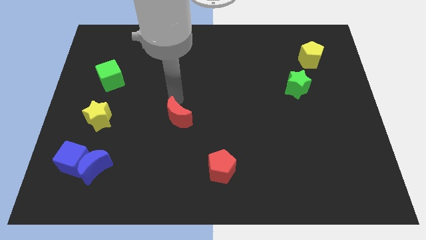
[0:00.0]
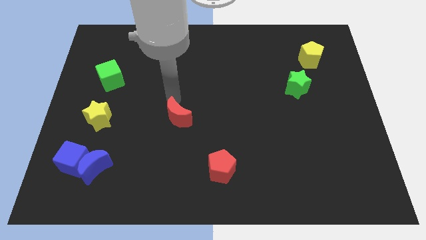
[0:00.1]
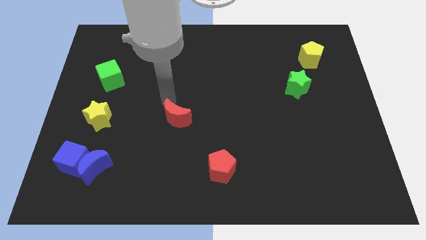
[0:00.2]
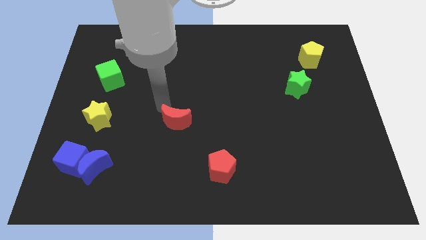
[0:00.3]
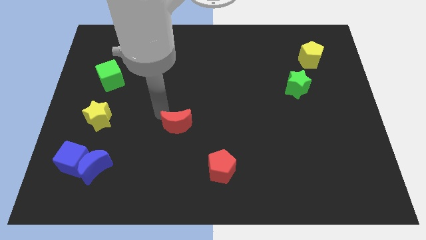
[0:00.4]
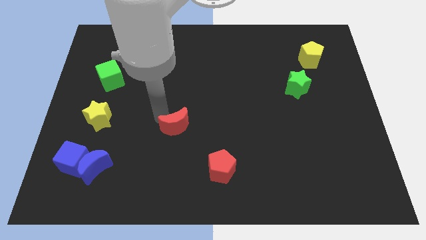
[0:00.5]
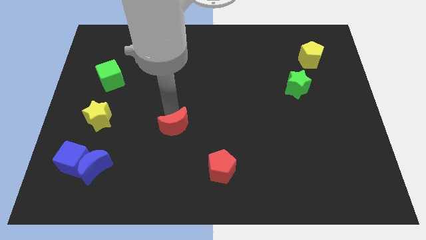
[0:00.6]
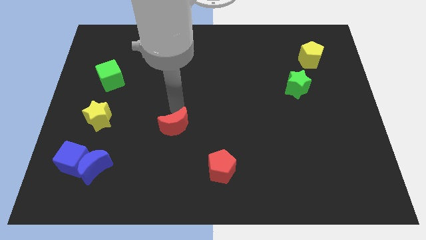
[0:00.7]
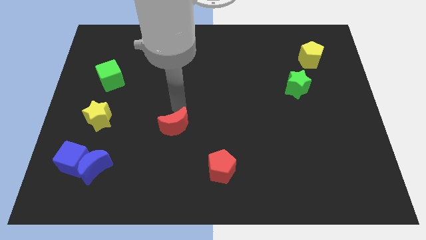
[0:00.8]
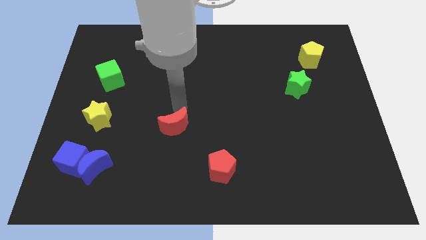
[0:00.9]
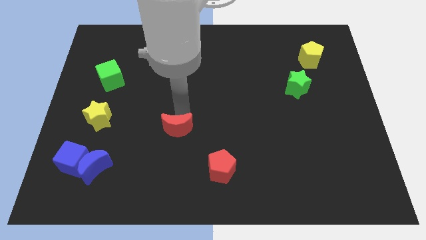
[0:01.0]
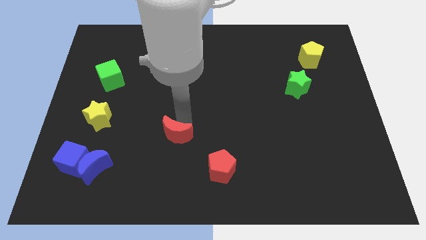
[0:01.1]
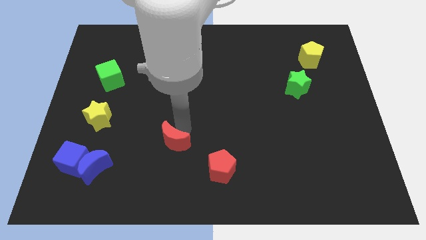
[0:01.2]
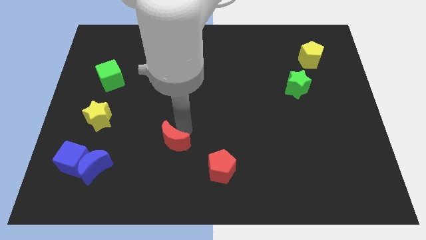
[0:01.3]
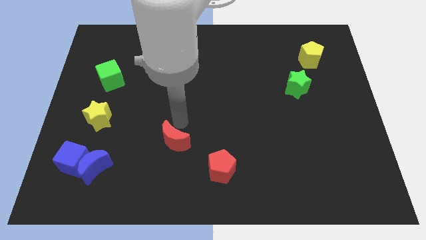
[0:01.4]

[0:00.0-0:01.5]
move the red moon diagonally above the red pentagon

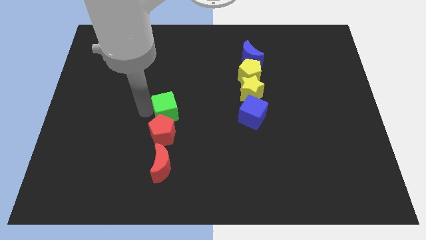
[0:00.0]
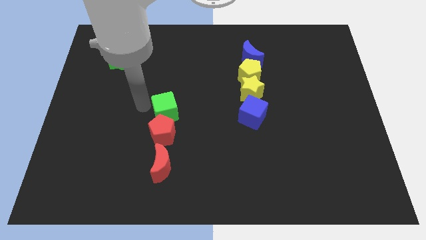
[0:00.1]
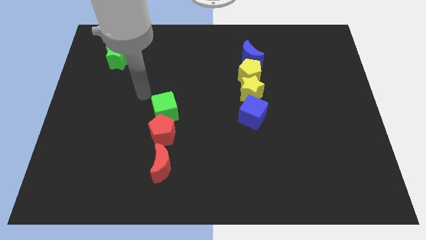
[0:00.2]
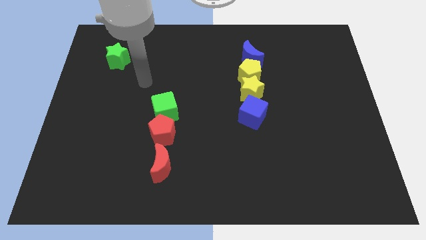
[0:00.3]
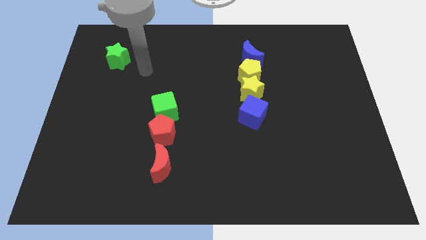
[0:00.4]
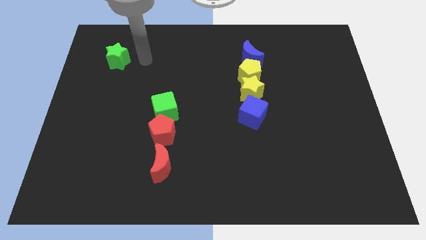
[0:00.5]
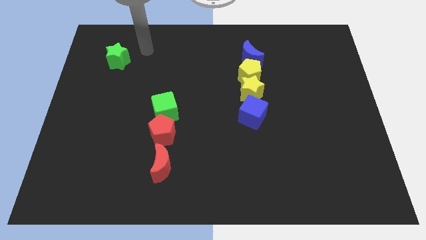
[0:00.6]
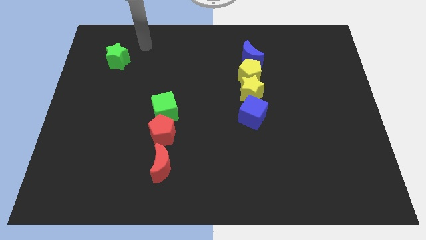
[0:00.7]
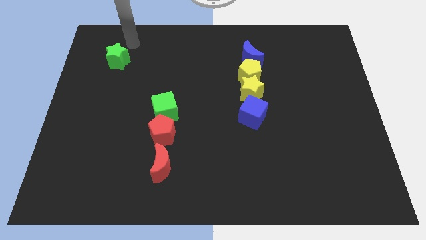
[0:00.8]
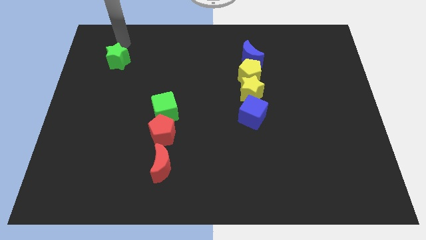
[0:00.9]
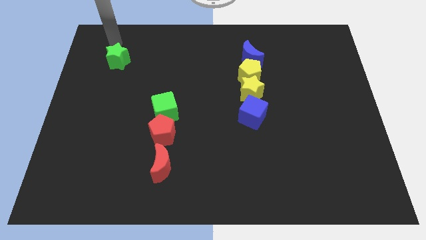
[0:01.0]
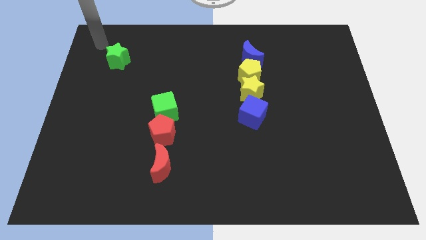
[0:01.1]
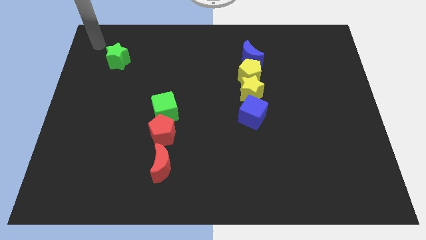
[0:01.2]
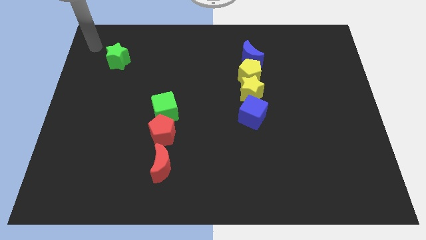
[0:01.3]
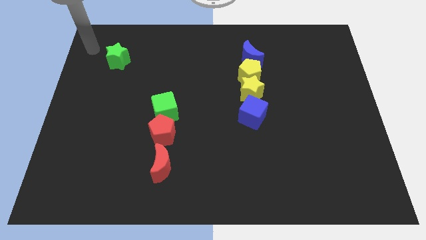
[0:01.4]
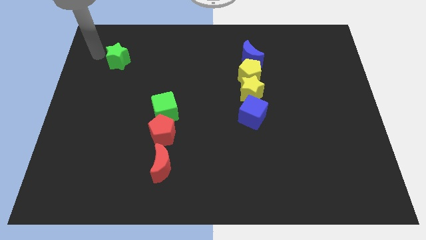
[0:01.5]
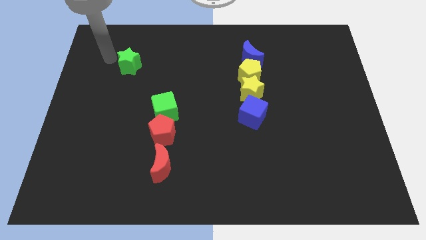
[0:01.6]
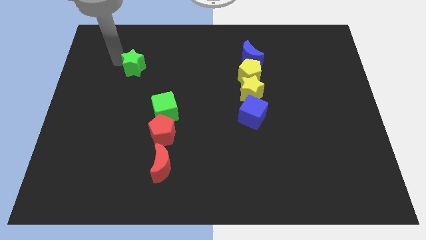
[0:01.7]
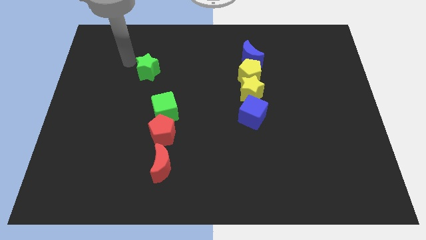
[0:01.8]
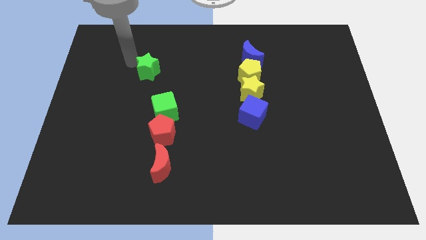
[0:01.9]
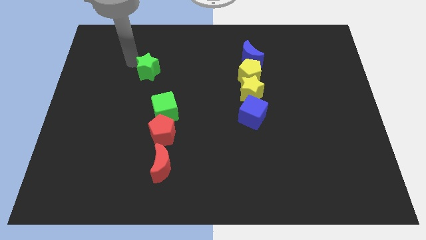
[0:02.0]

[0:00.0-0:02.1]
slide the green star towards the green cube

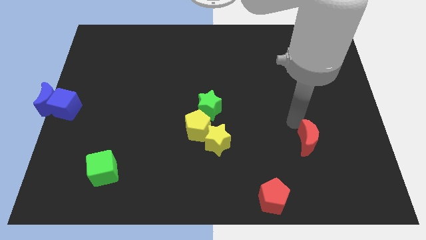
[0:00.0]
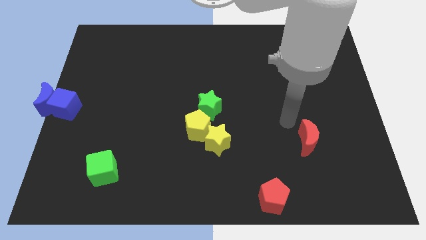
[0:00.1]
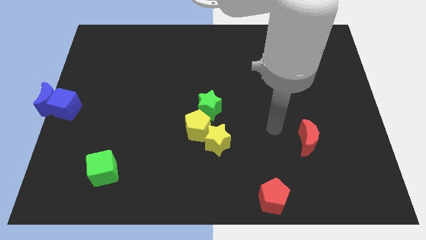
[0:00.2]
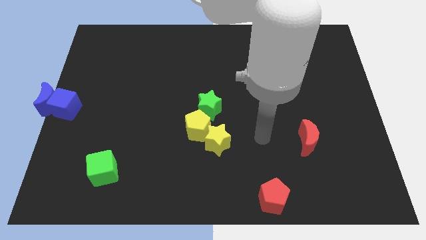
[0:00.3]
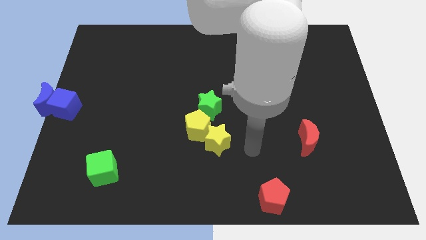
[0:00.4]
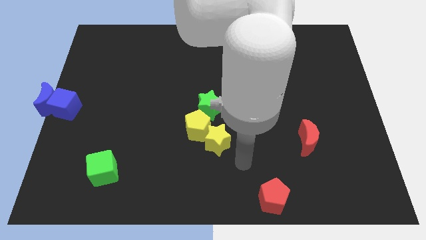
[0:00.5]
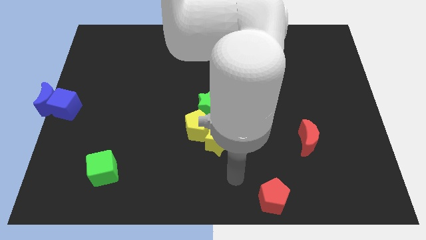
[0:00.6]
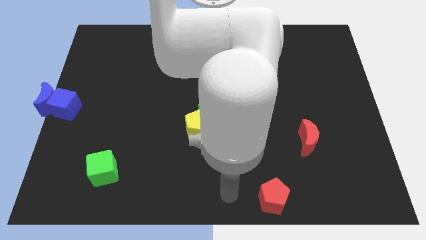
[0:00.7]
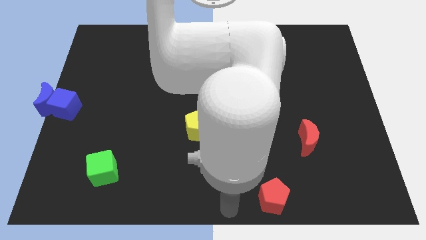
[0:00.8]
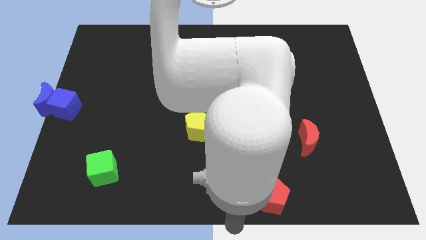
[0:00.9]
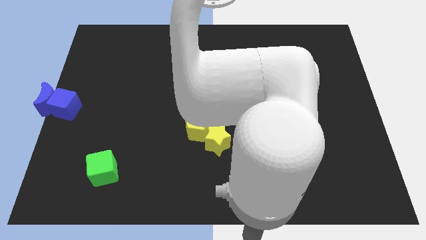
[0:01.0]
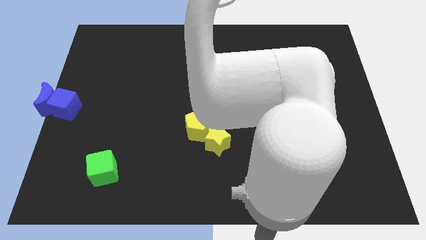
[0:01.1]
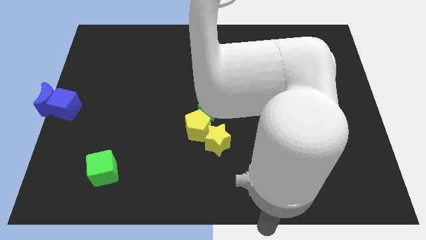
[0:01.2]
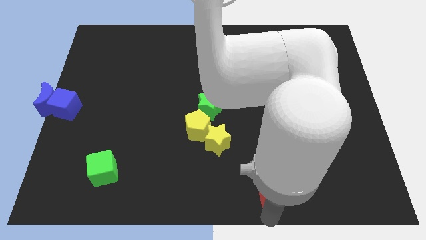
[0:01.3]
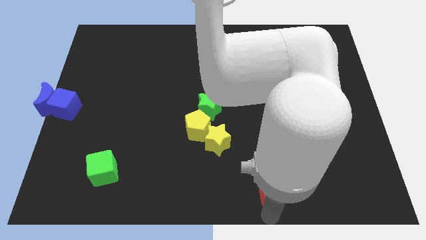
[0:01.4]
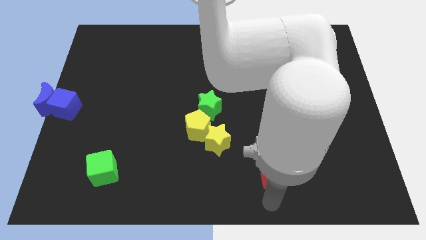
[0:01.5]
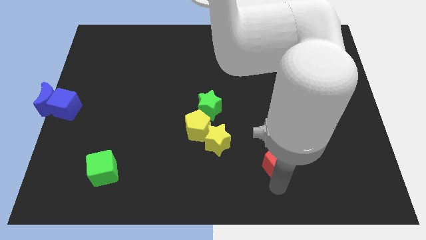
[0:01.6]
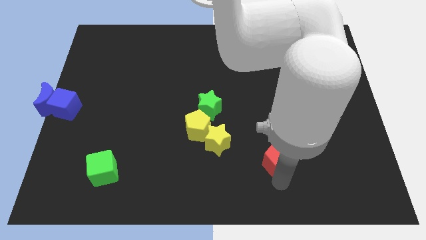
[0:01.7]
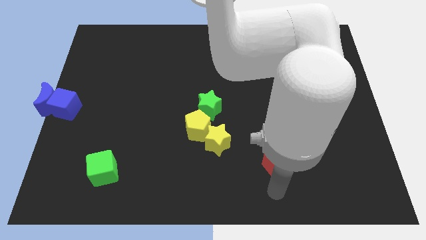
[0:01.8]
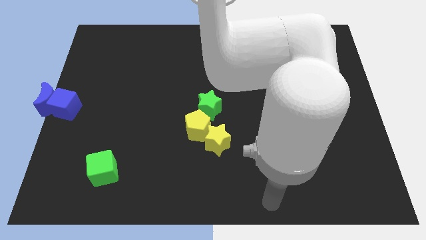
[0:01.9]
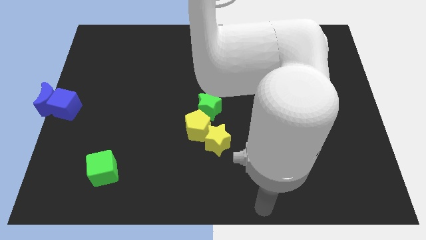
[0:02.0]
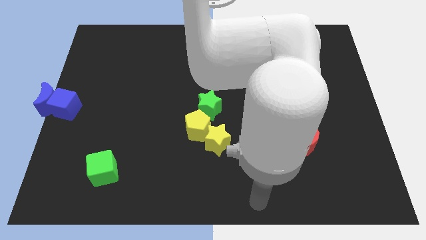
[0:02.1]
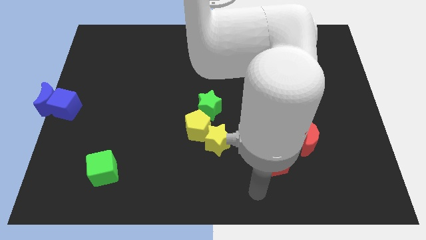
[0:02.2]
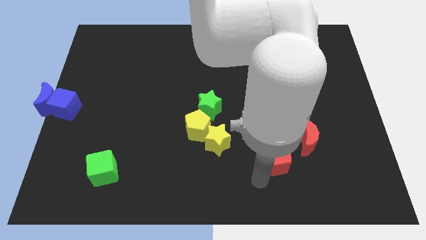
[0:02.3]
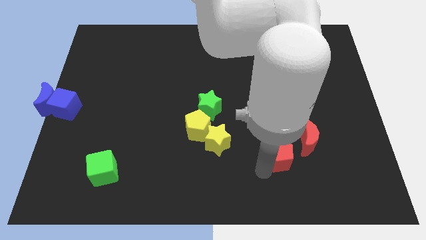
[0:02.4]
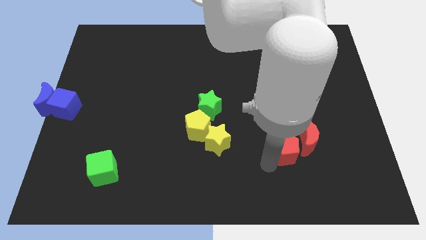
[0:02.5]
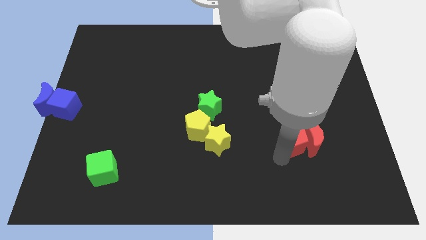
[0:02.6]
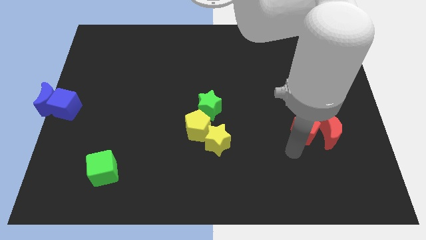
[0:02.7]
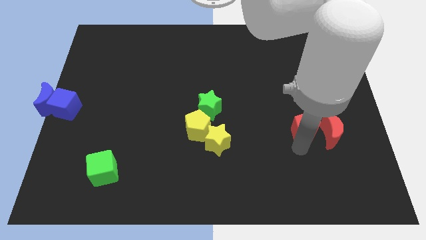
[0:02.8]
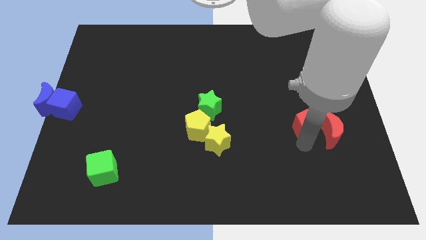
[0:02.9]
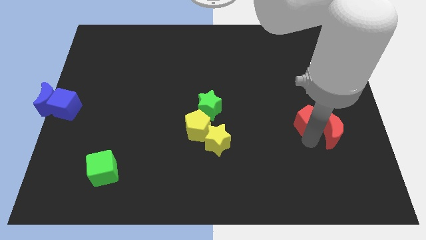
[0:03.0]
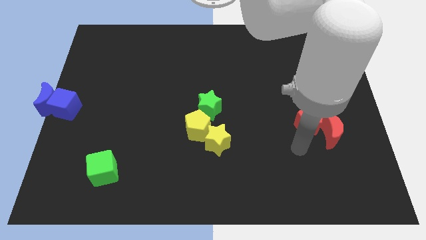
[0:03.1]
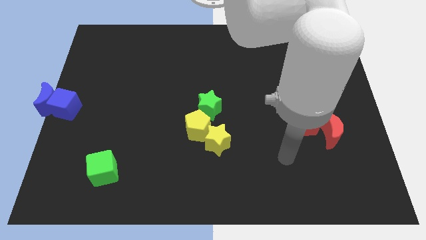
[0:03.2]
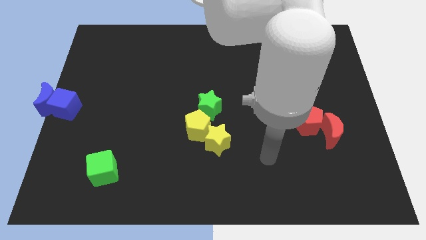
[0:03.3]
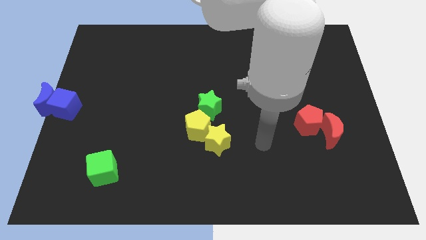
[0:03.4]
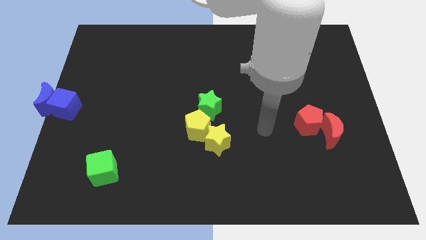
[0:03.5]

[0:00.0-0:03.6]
push the red crescent and red pentagon towards diagonally

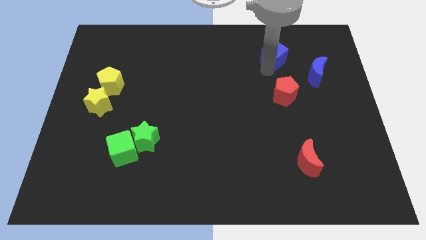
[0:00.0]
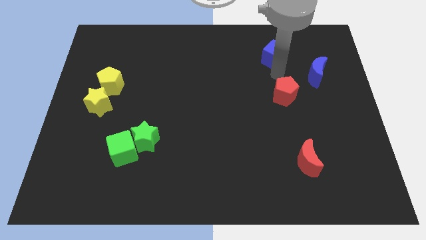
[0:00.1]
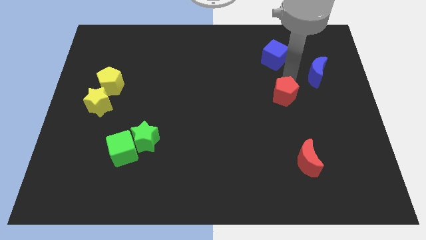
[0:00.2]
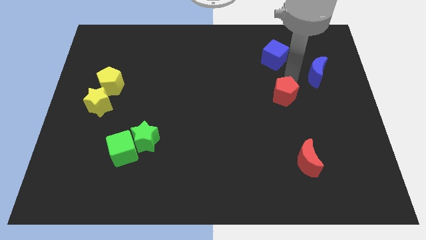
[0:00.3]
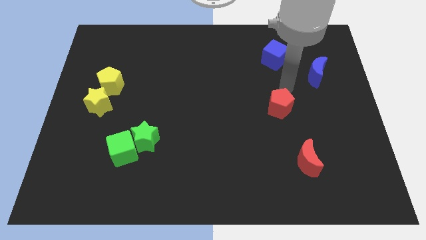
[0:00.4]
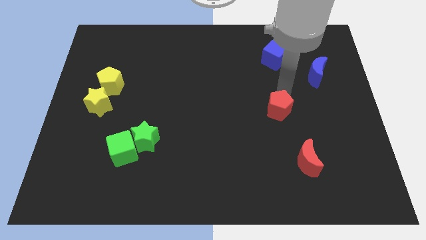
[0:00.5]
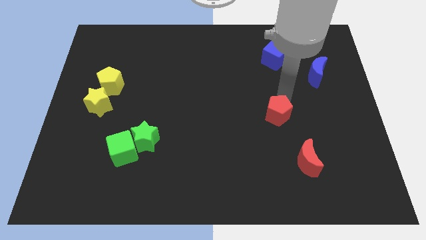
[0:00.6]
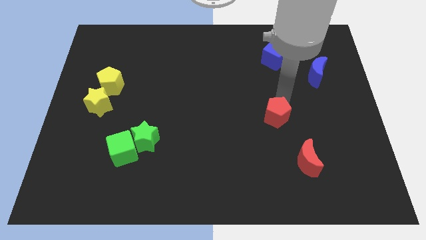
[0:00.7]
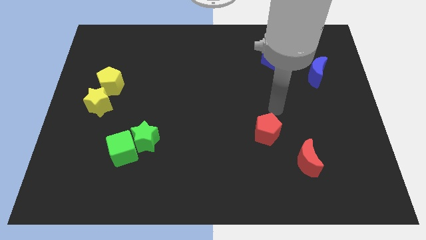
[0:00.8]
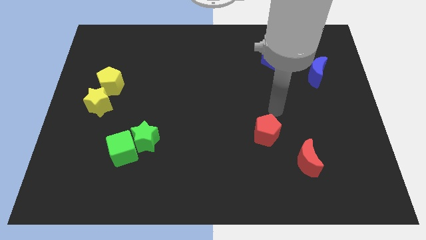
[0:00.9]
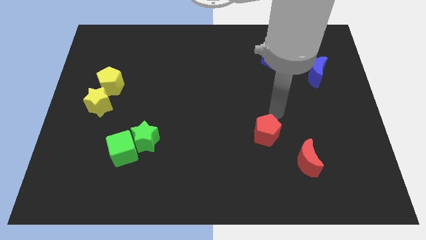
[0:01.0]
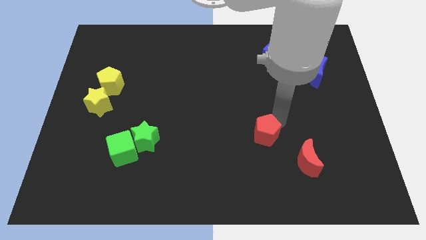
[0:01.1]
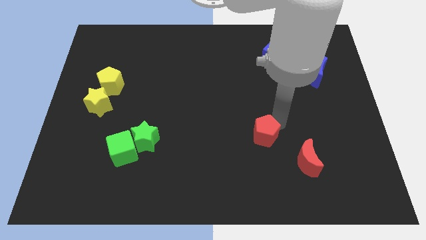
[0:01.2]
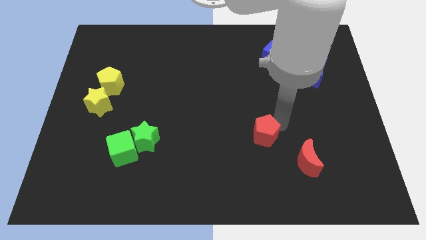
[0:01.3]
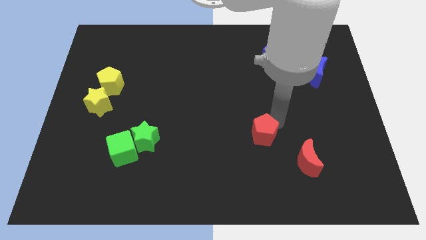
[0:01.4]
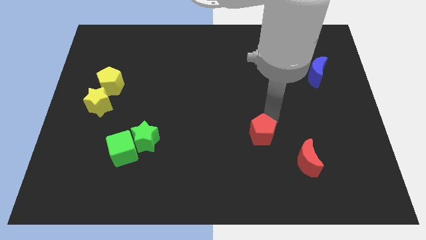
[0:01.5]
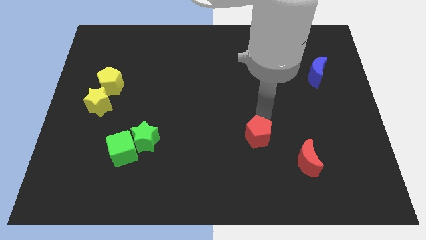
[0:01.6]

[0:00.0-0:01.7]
push the red pentagon towards the bottom side of the board
